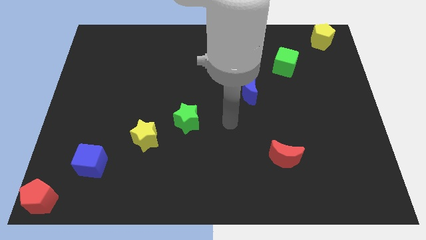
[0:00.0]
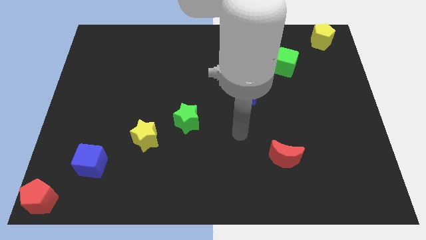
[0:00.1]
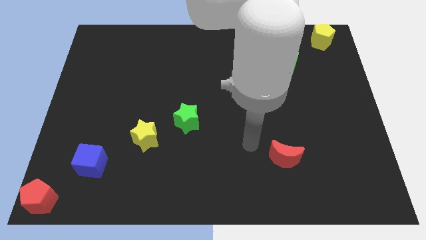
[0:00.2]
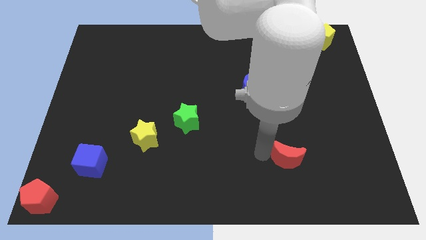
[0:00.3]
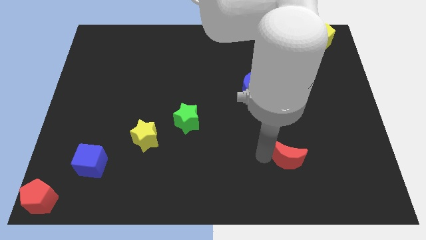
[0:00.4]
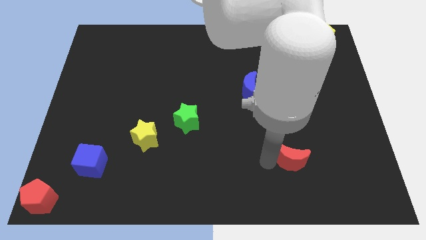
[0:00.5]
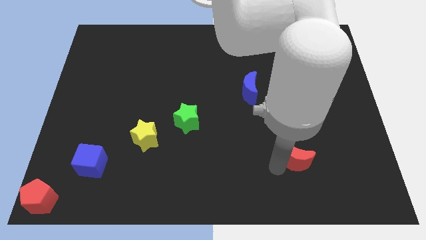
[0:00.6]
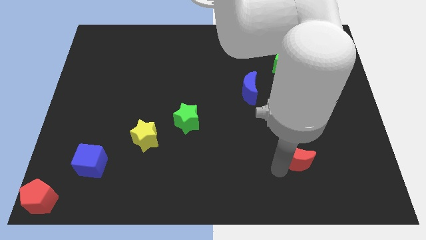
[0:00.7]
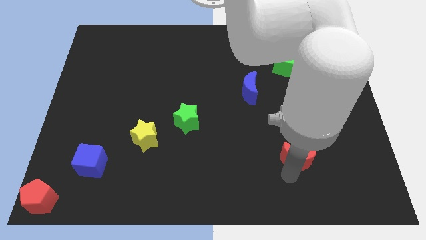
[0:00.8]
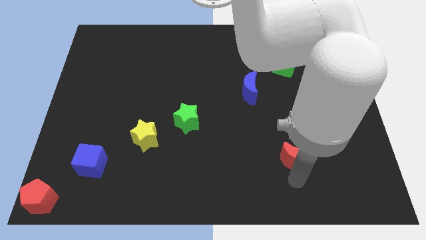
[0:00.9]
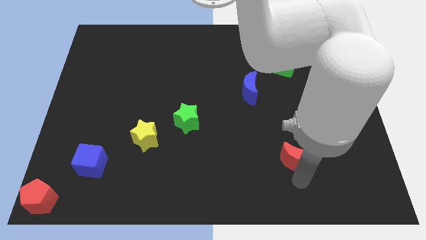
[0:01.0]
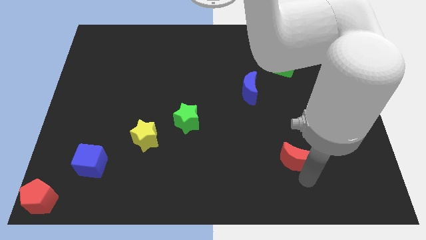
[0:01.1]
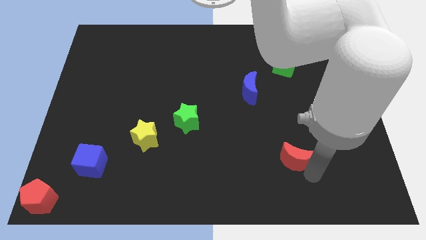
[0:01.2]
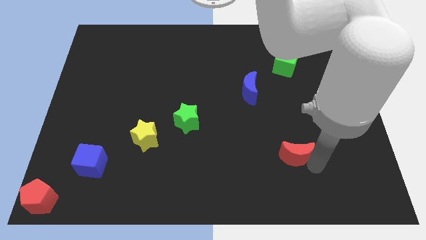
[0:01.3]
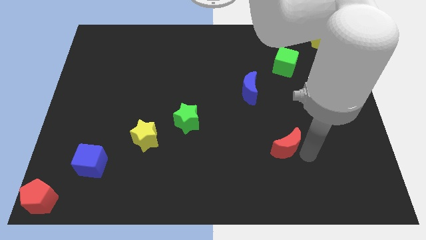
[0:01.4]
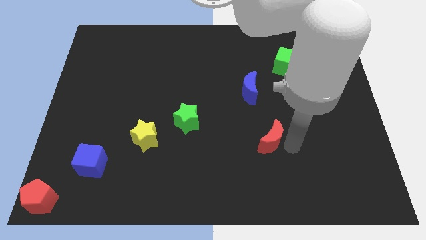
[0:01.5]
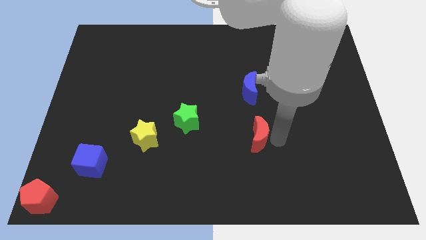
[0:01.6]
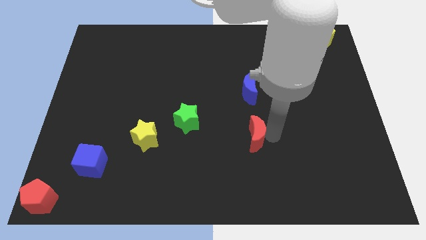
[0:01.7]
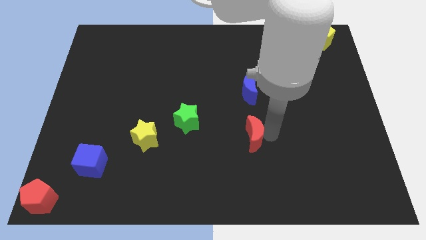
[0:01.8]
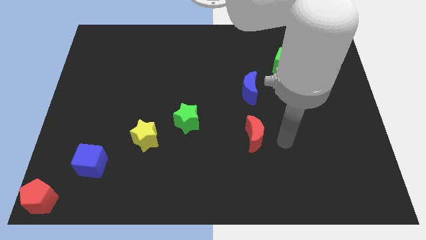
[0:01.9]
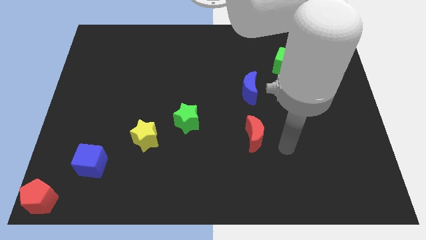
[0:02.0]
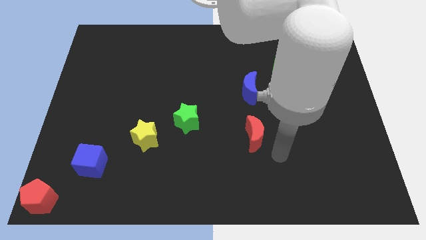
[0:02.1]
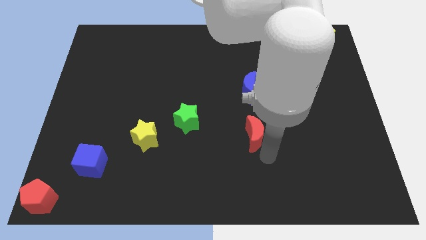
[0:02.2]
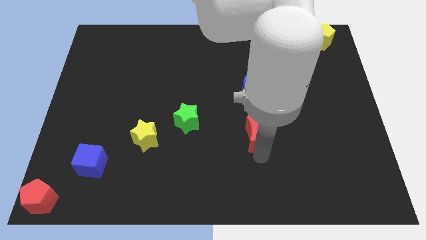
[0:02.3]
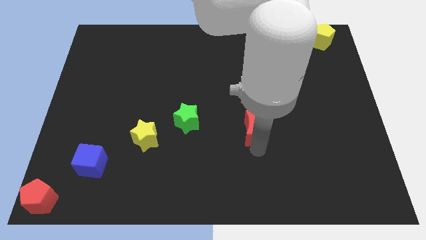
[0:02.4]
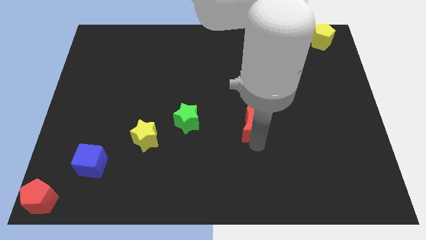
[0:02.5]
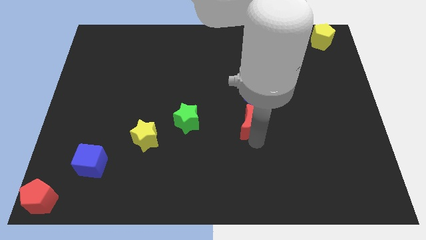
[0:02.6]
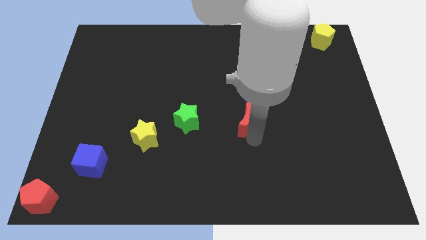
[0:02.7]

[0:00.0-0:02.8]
push red crescent

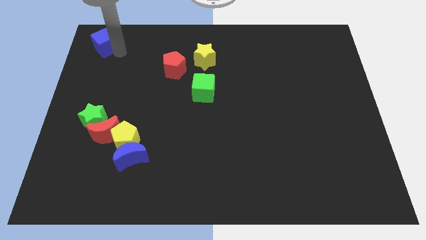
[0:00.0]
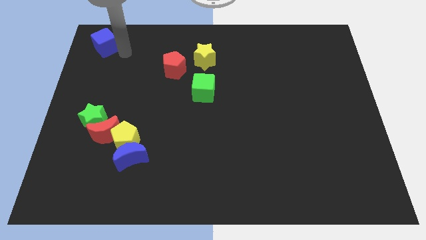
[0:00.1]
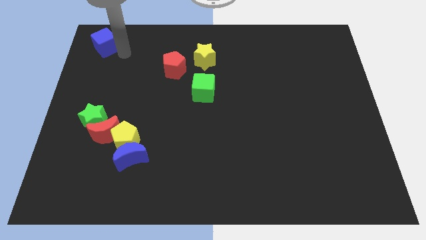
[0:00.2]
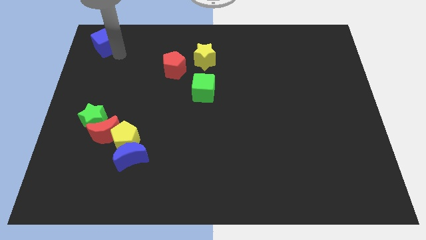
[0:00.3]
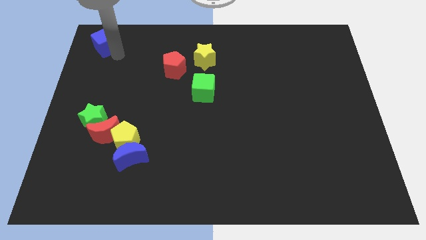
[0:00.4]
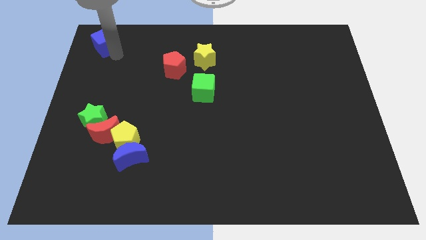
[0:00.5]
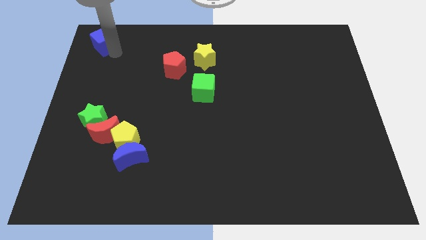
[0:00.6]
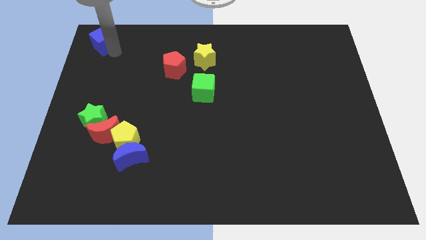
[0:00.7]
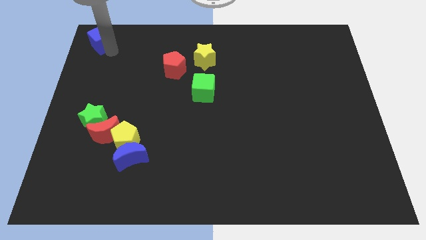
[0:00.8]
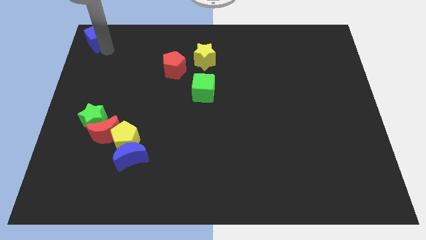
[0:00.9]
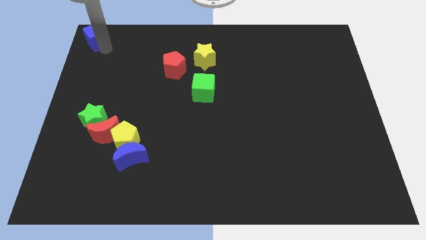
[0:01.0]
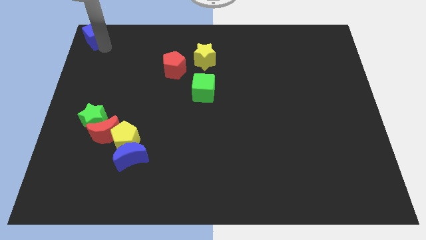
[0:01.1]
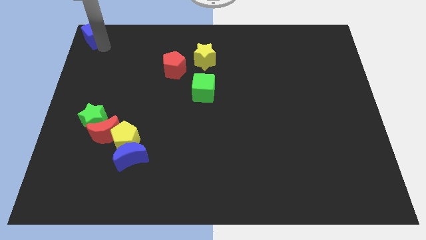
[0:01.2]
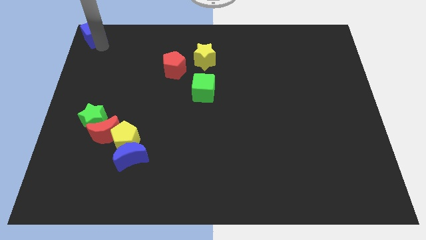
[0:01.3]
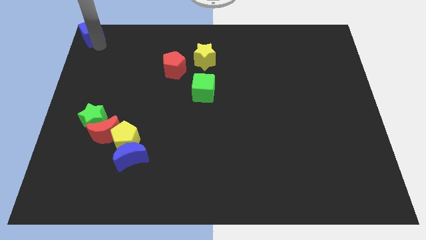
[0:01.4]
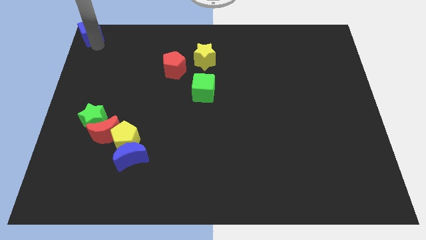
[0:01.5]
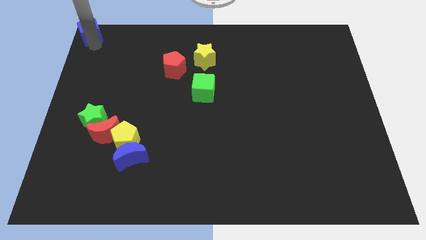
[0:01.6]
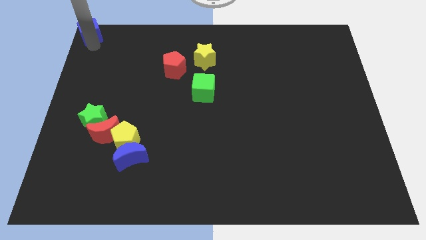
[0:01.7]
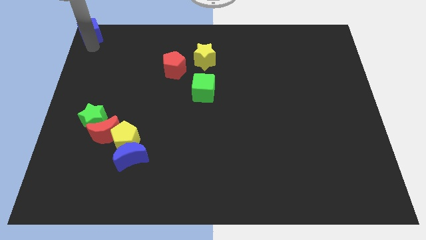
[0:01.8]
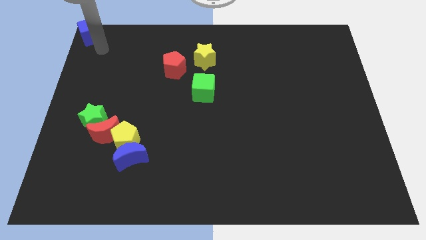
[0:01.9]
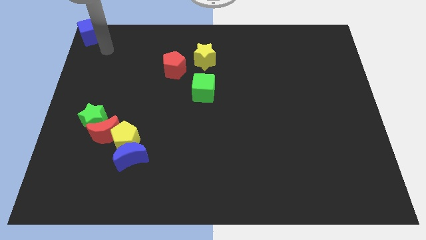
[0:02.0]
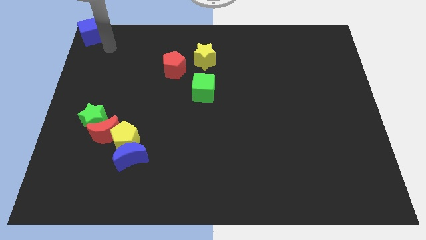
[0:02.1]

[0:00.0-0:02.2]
push the blue cube to the top left of the board

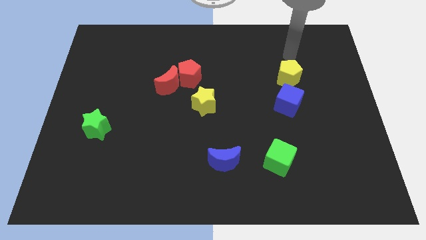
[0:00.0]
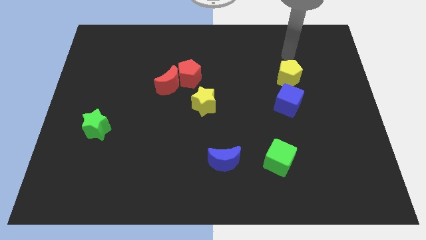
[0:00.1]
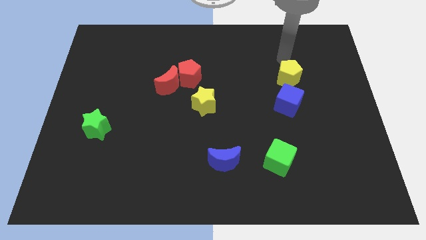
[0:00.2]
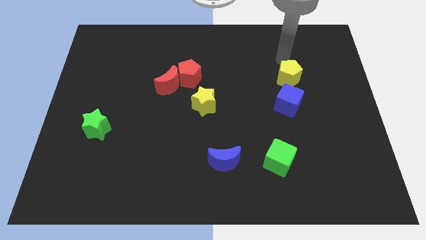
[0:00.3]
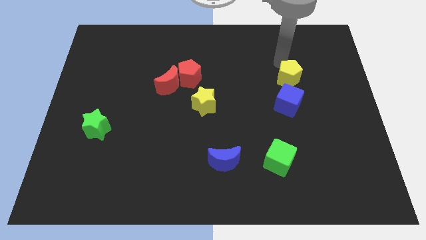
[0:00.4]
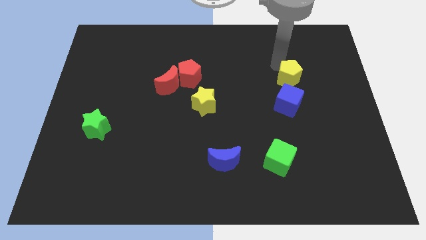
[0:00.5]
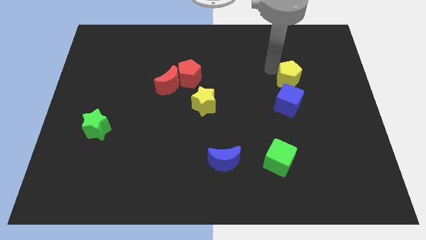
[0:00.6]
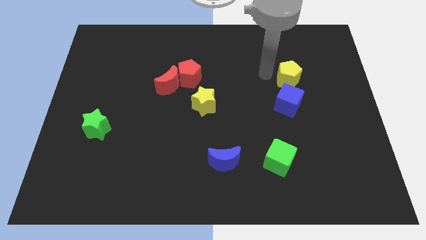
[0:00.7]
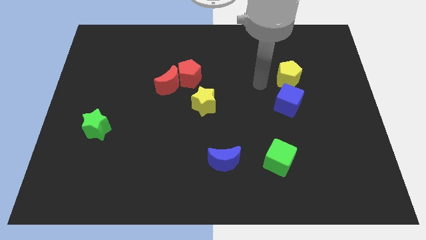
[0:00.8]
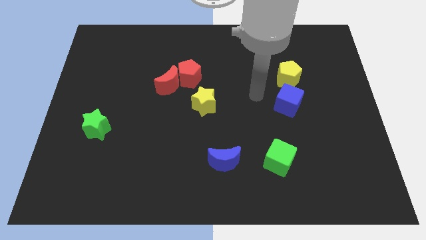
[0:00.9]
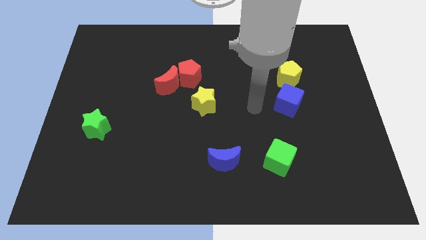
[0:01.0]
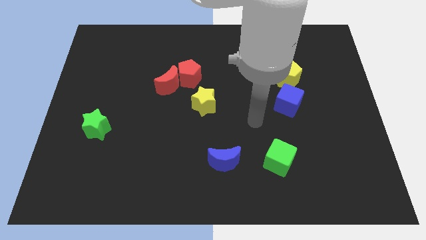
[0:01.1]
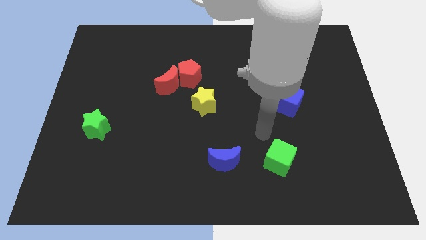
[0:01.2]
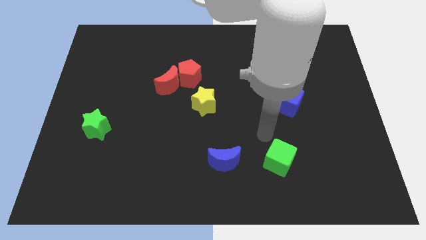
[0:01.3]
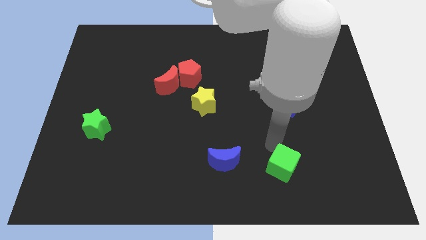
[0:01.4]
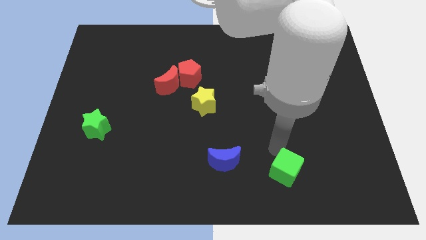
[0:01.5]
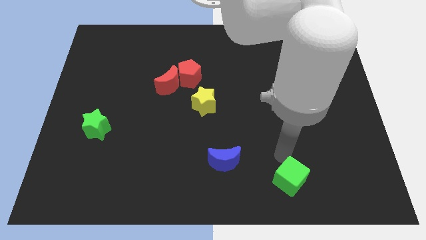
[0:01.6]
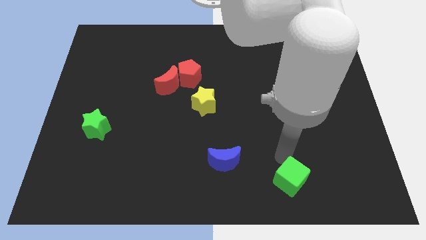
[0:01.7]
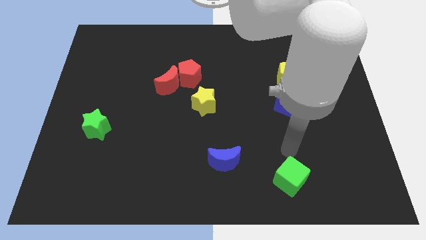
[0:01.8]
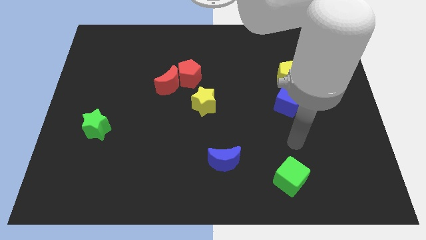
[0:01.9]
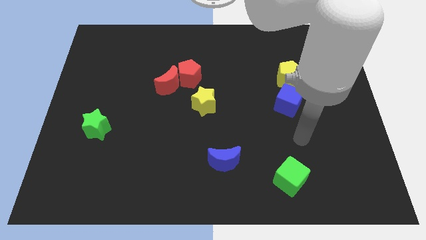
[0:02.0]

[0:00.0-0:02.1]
push the green cube slightly downwards

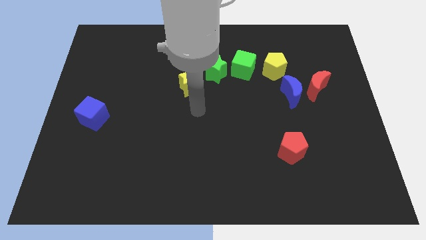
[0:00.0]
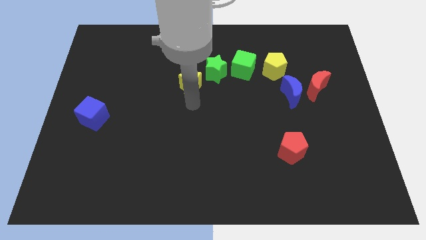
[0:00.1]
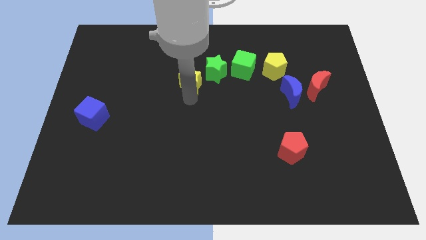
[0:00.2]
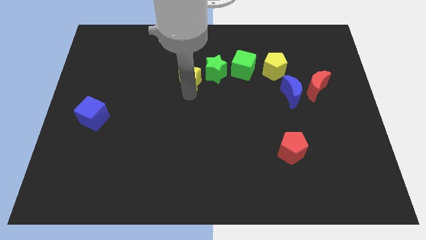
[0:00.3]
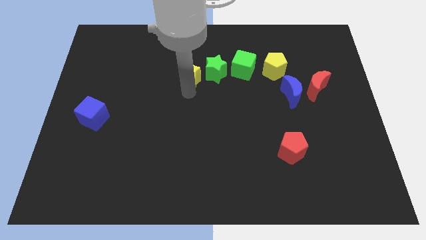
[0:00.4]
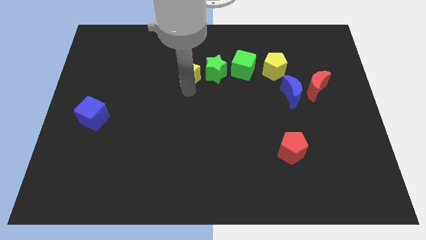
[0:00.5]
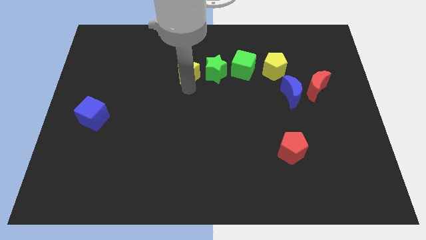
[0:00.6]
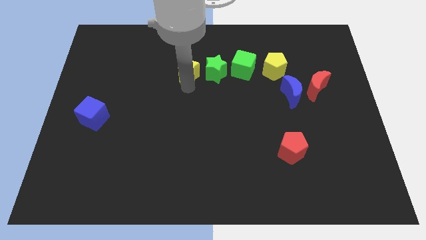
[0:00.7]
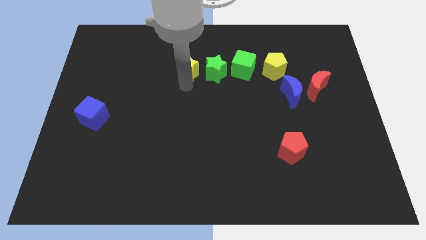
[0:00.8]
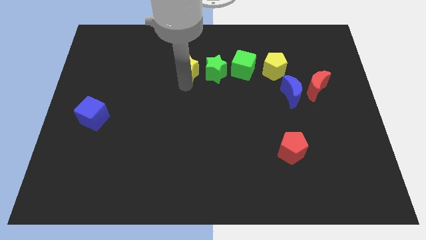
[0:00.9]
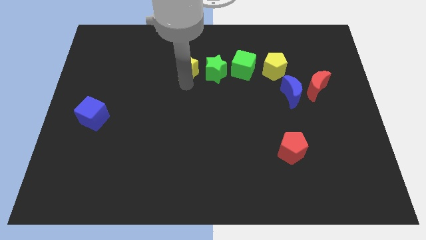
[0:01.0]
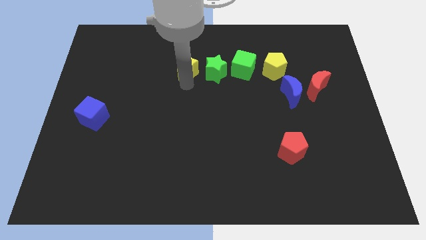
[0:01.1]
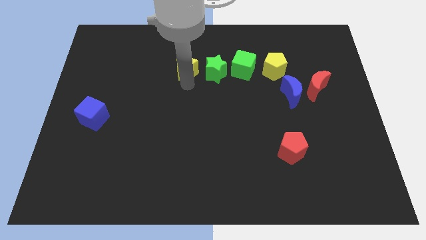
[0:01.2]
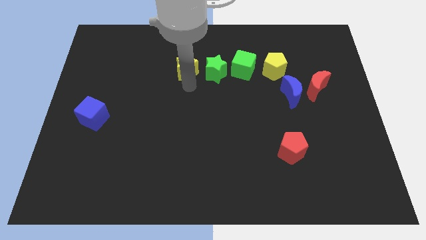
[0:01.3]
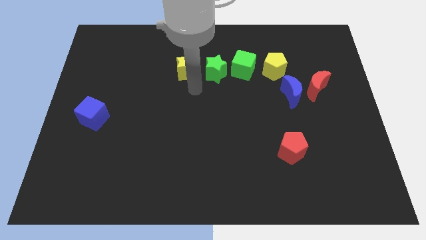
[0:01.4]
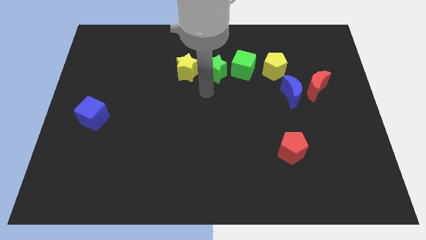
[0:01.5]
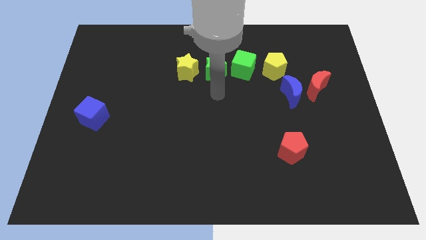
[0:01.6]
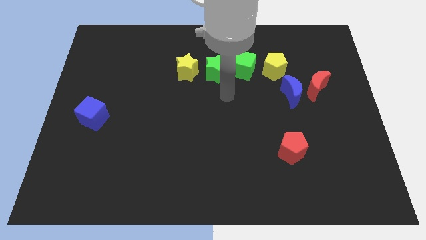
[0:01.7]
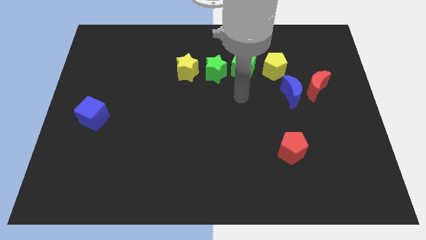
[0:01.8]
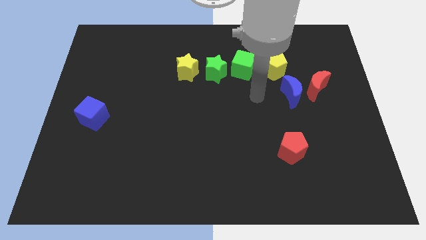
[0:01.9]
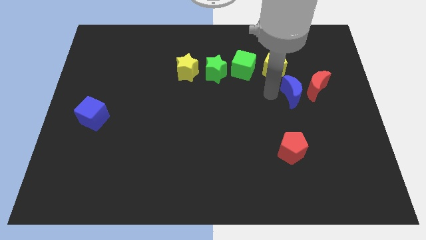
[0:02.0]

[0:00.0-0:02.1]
drag the yellow star diagonally to blue cube
